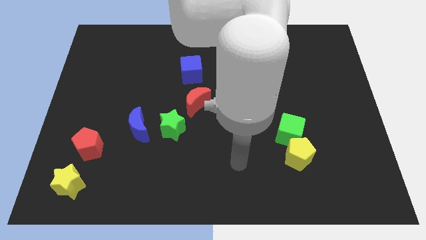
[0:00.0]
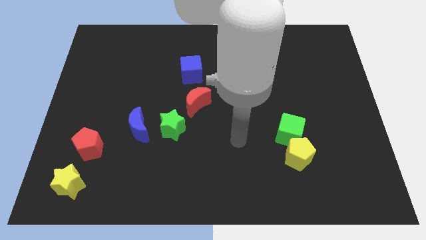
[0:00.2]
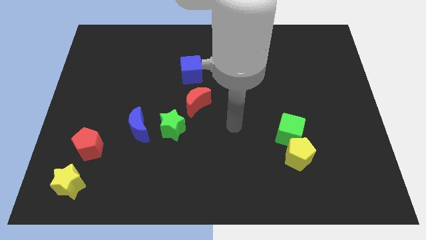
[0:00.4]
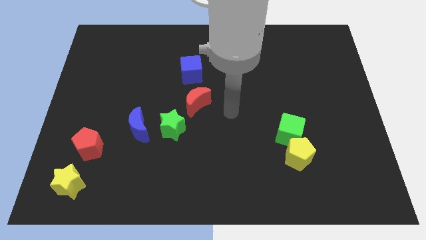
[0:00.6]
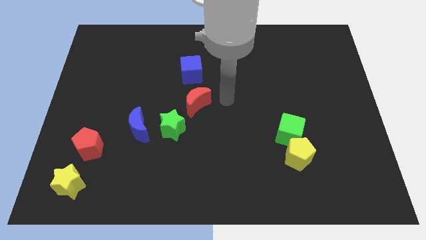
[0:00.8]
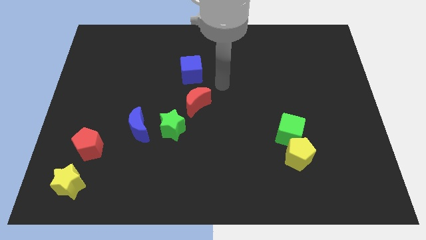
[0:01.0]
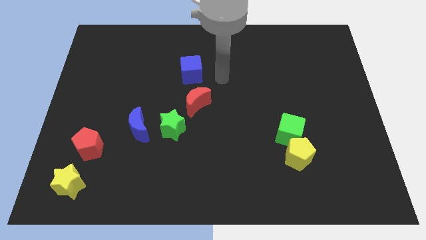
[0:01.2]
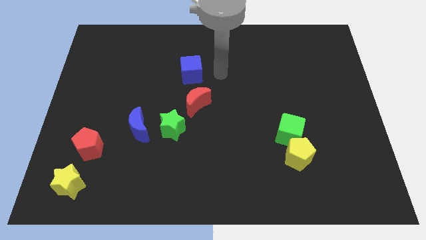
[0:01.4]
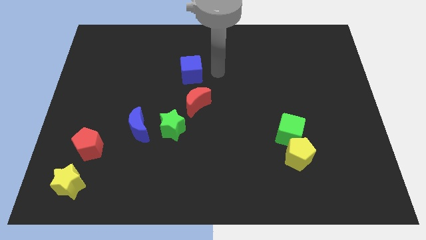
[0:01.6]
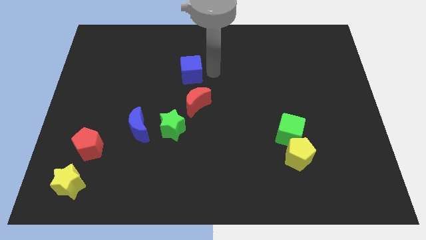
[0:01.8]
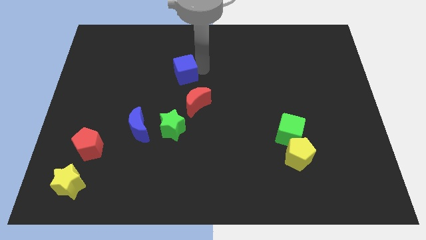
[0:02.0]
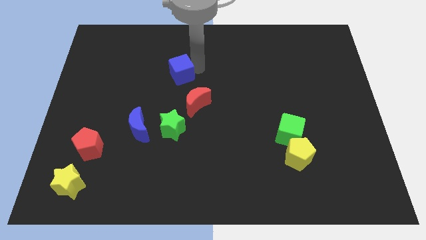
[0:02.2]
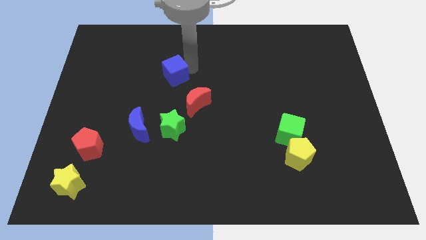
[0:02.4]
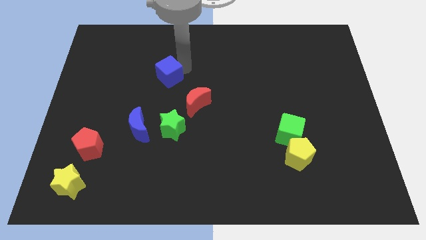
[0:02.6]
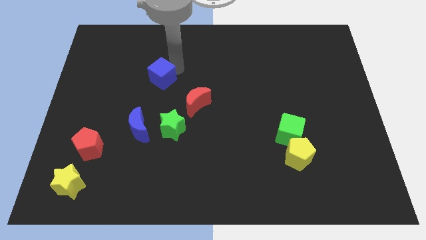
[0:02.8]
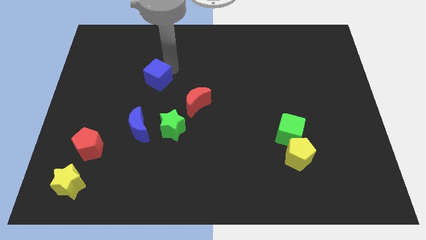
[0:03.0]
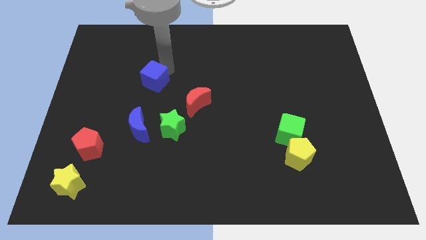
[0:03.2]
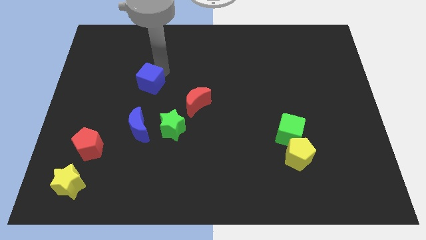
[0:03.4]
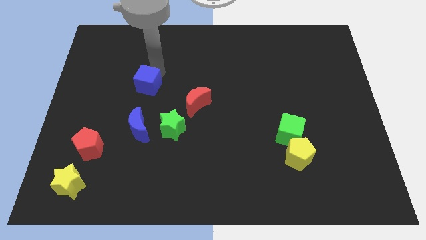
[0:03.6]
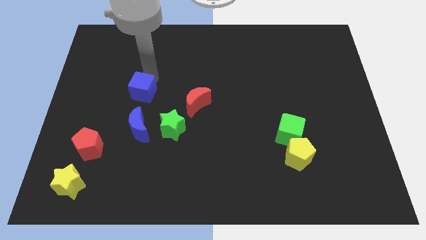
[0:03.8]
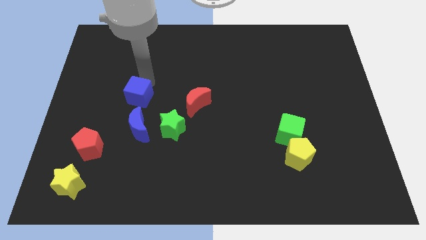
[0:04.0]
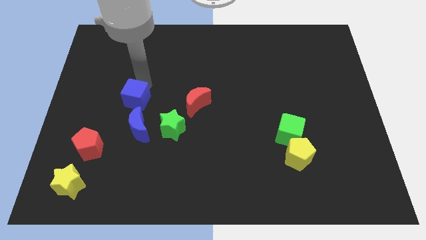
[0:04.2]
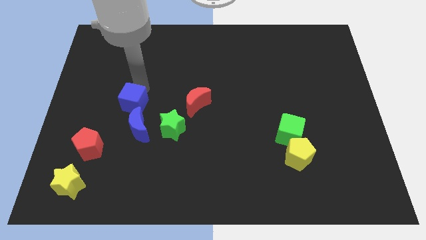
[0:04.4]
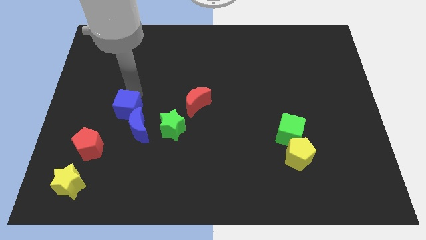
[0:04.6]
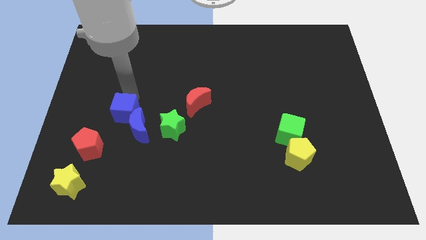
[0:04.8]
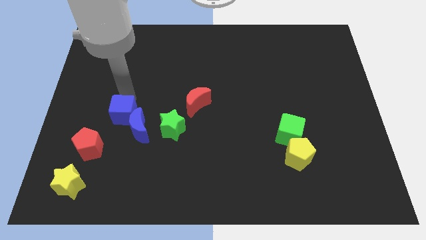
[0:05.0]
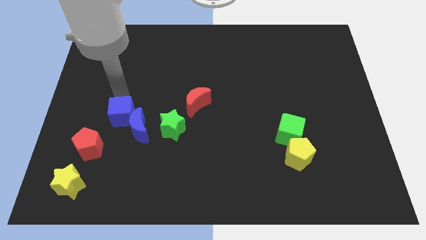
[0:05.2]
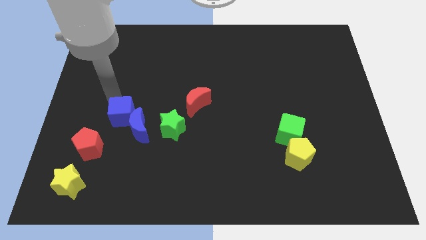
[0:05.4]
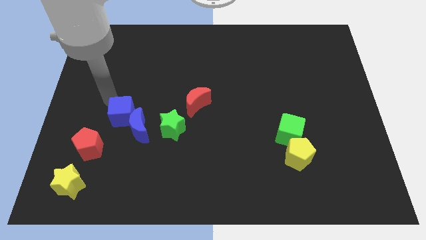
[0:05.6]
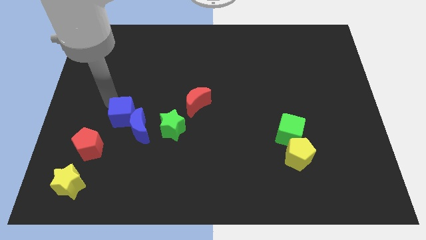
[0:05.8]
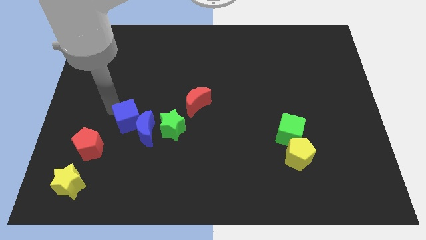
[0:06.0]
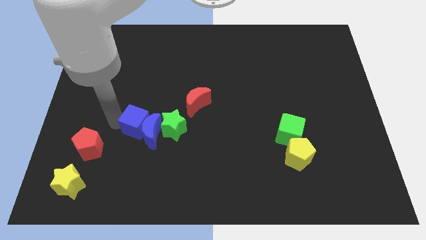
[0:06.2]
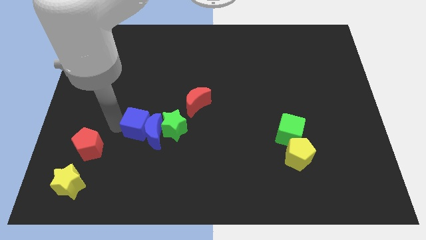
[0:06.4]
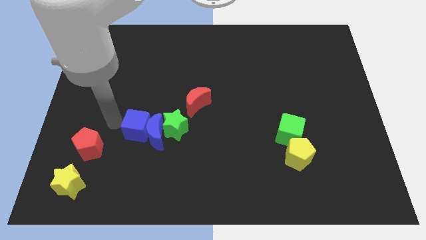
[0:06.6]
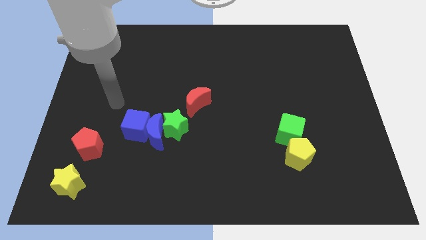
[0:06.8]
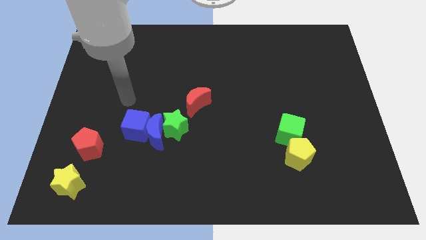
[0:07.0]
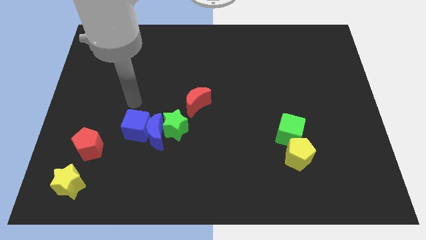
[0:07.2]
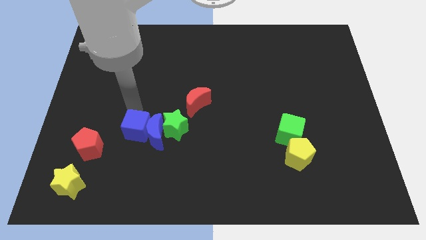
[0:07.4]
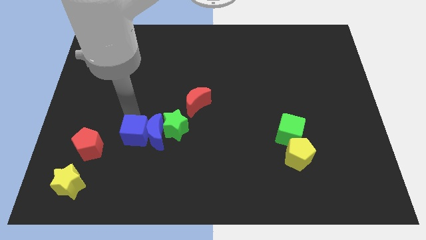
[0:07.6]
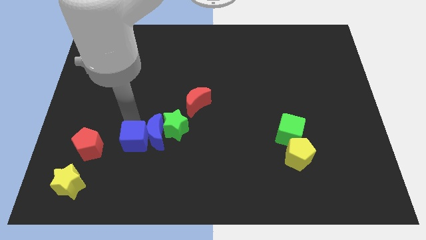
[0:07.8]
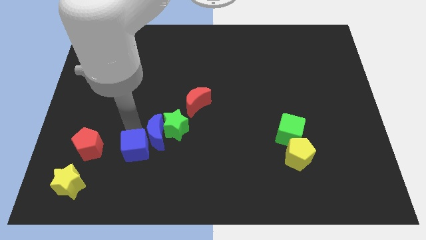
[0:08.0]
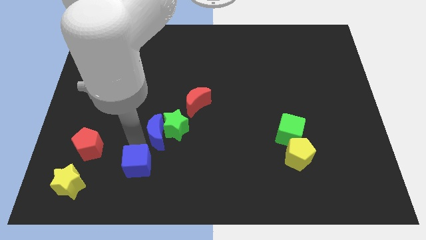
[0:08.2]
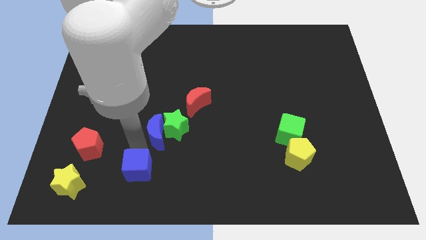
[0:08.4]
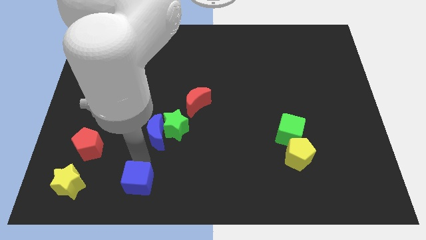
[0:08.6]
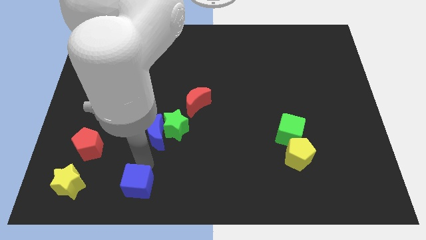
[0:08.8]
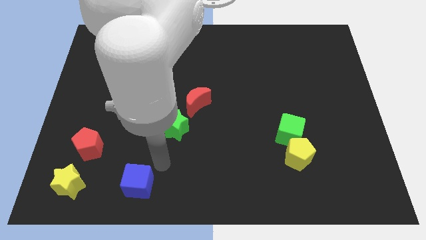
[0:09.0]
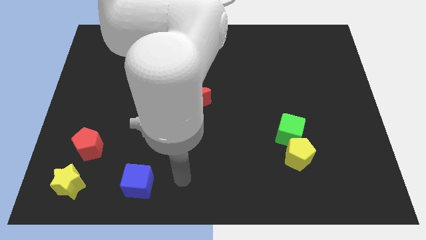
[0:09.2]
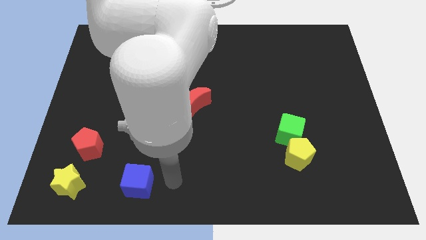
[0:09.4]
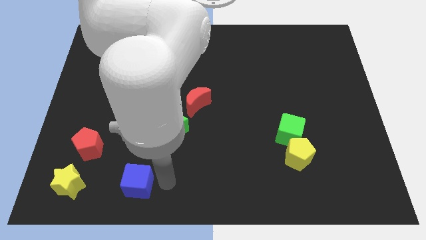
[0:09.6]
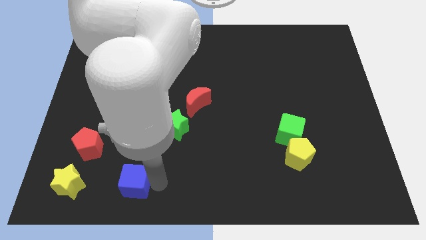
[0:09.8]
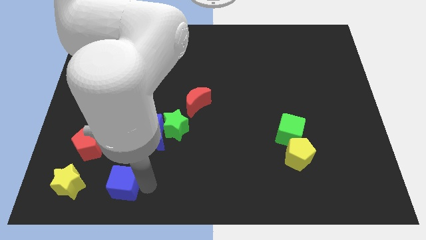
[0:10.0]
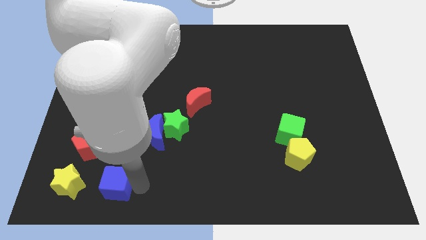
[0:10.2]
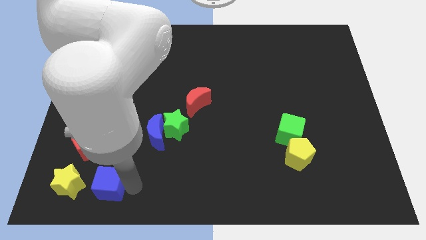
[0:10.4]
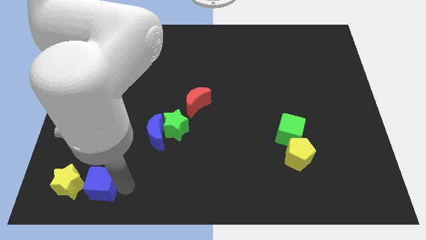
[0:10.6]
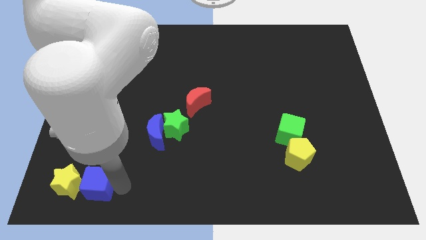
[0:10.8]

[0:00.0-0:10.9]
push the blue cube towards the yellow star

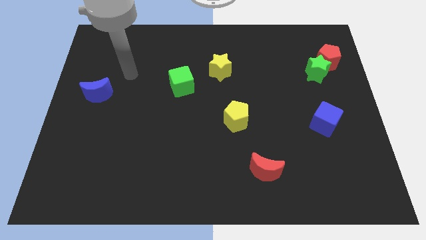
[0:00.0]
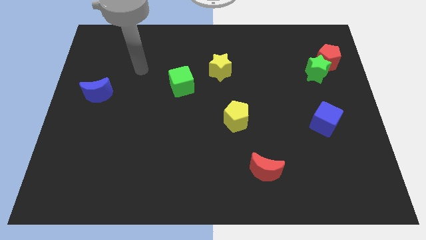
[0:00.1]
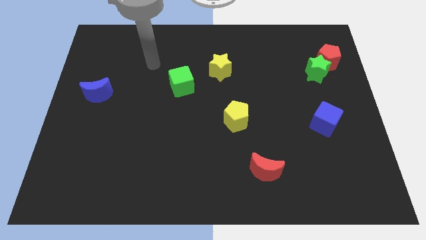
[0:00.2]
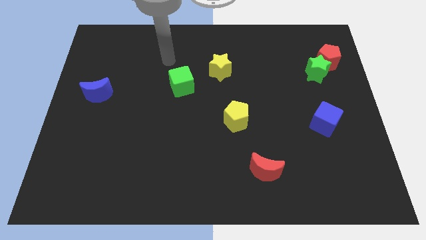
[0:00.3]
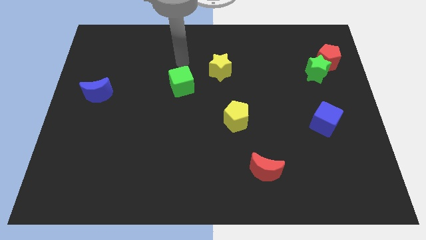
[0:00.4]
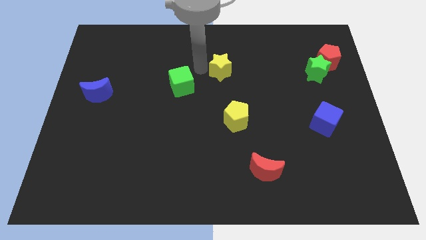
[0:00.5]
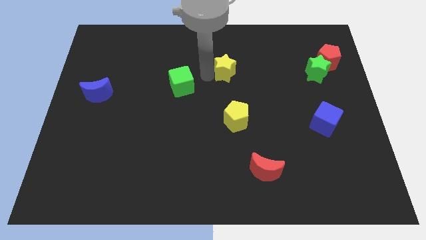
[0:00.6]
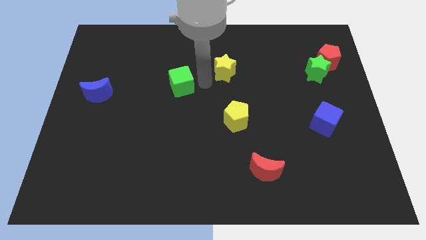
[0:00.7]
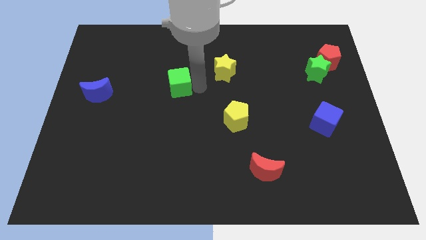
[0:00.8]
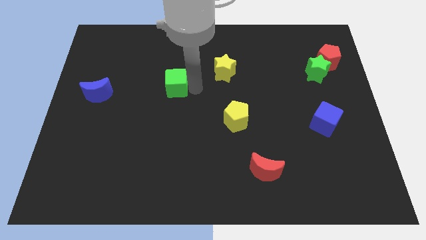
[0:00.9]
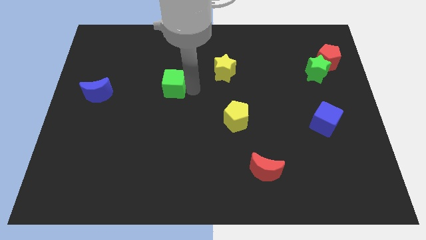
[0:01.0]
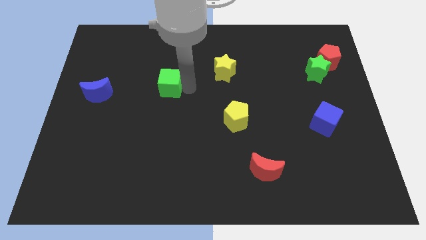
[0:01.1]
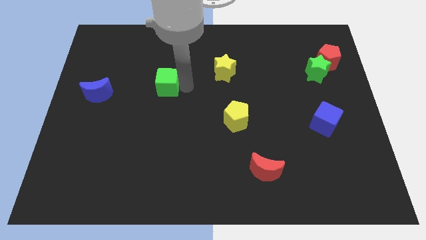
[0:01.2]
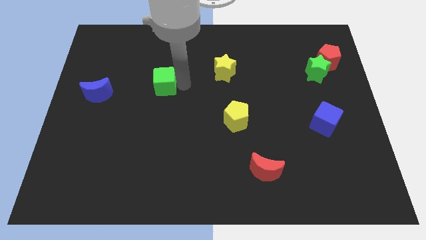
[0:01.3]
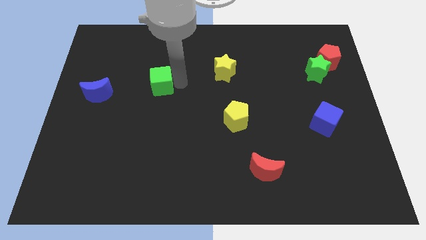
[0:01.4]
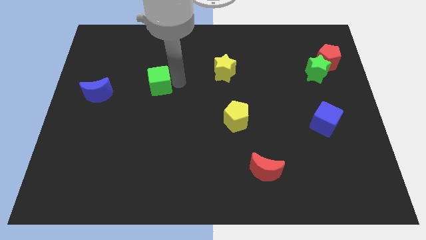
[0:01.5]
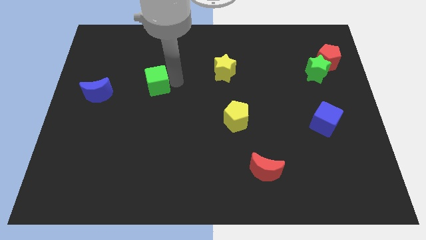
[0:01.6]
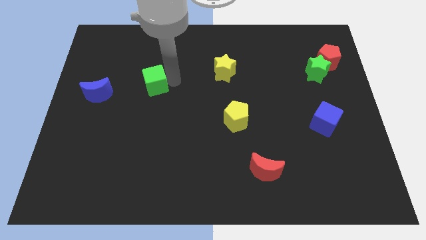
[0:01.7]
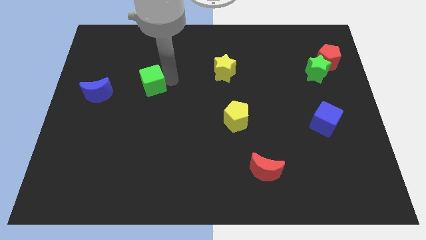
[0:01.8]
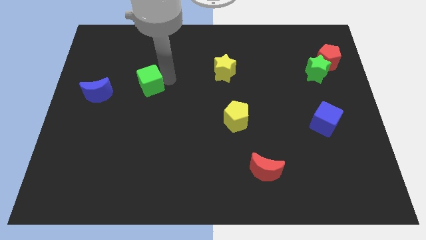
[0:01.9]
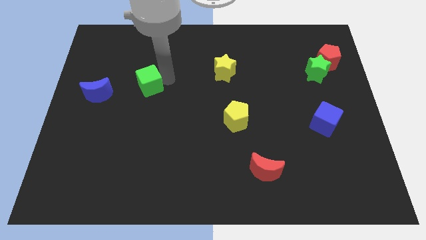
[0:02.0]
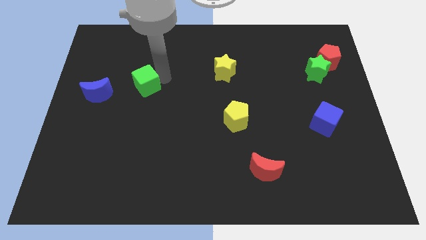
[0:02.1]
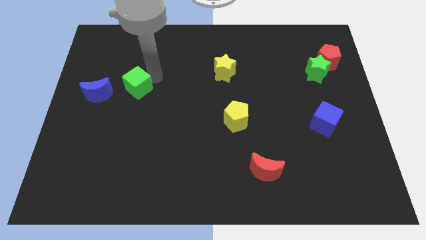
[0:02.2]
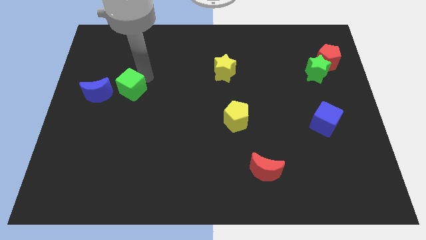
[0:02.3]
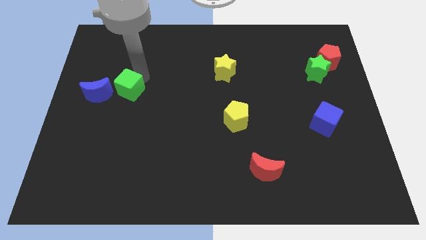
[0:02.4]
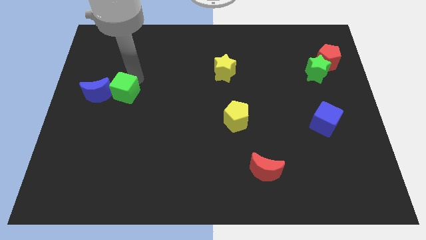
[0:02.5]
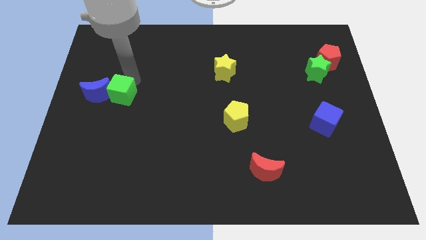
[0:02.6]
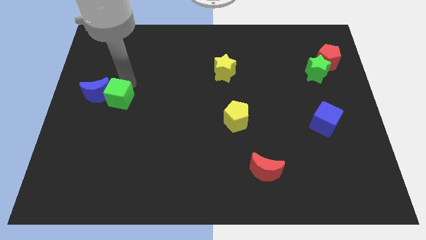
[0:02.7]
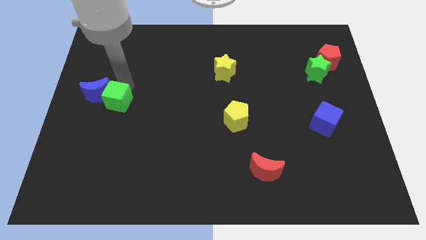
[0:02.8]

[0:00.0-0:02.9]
push the green cube close to the blue moon
